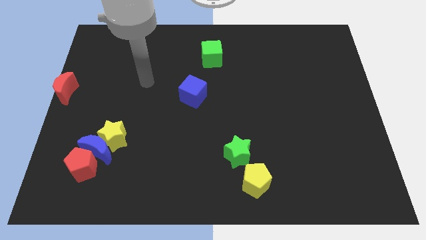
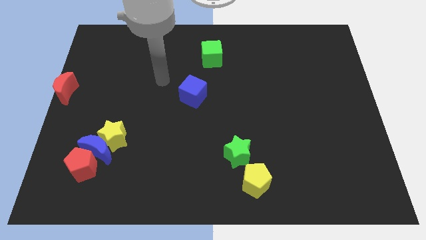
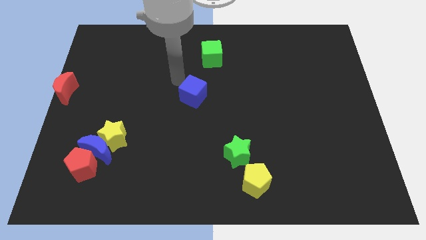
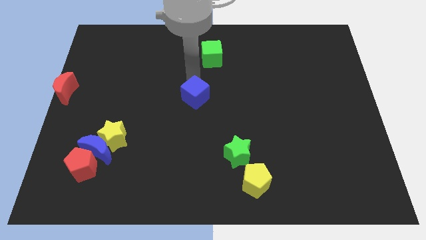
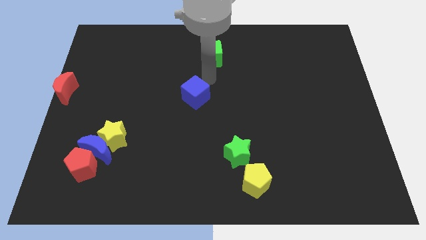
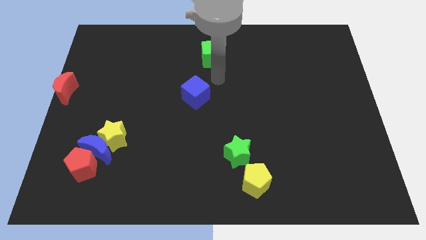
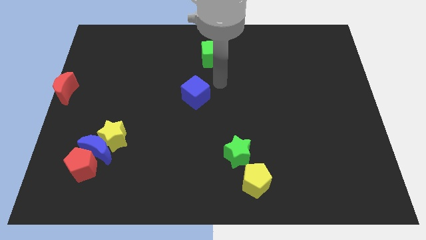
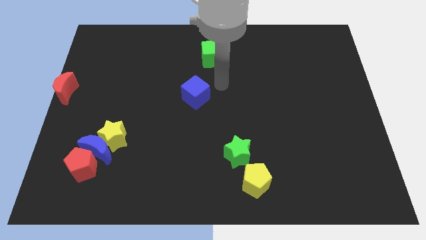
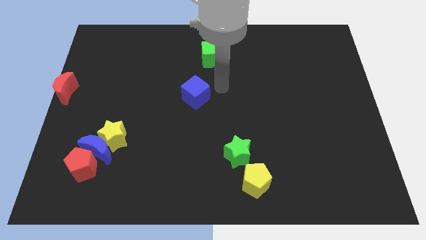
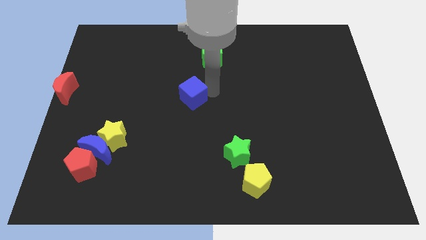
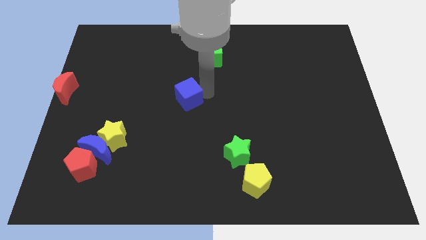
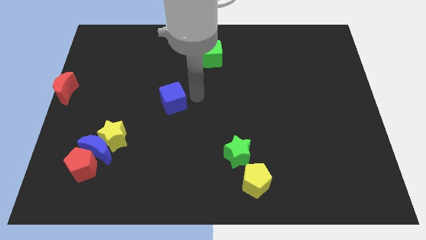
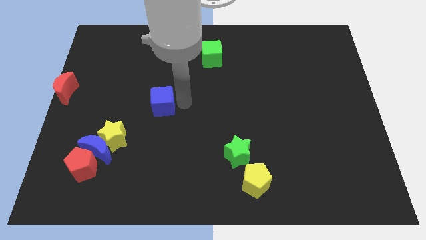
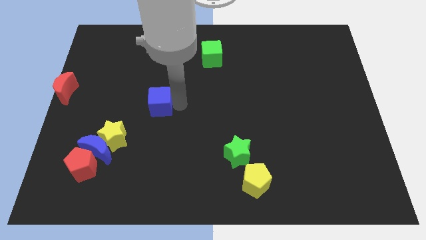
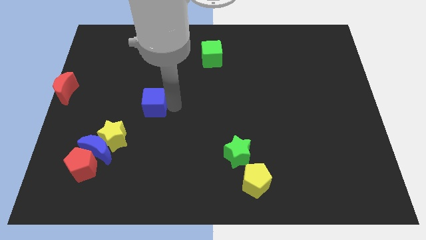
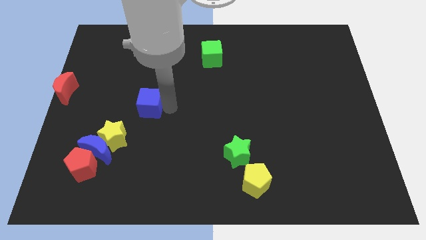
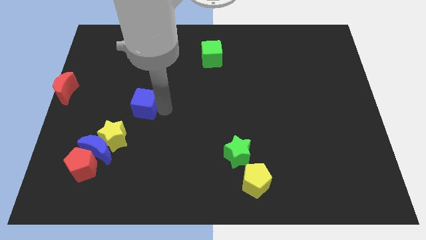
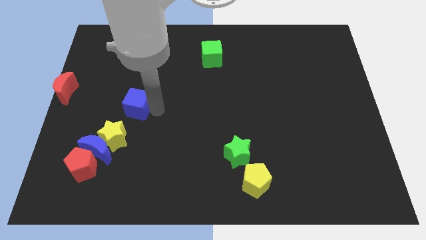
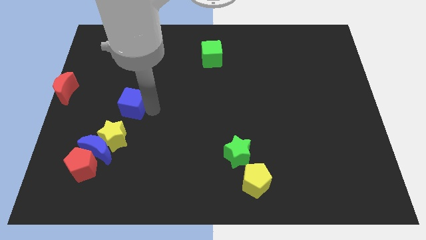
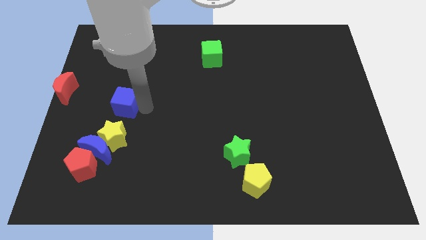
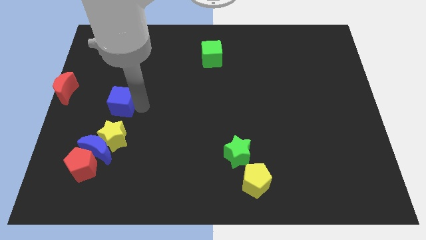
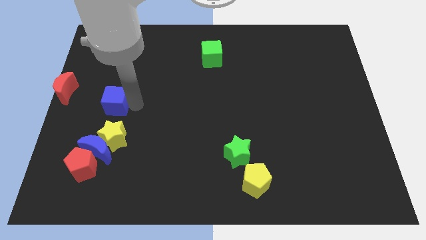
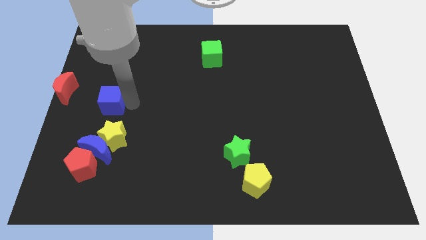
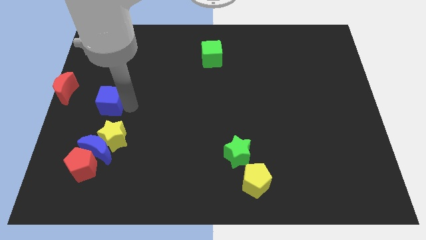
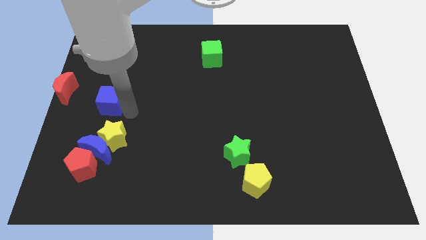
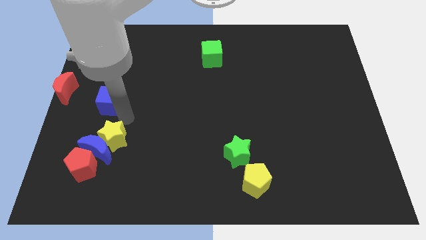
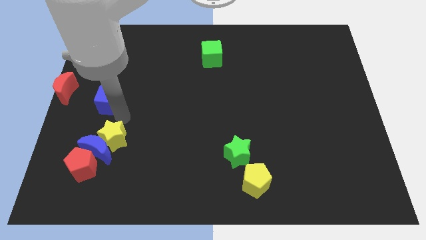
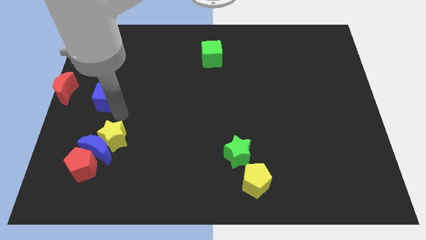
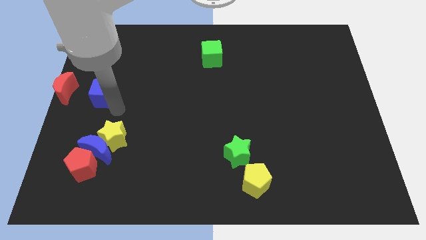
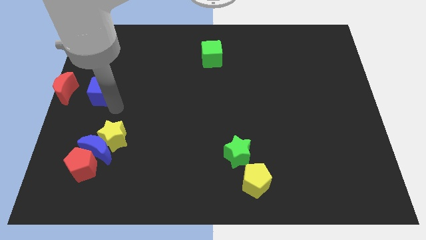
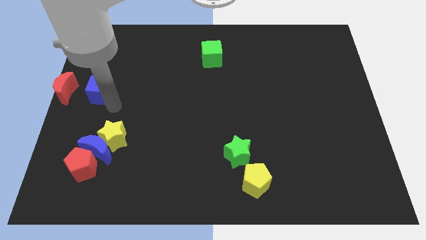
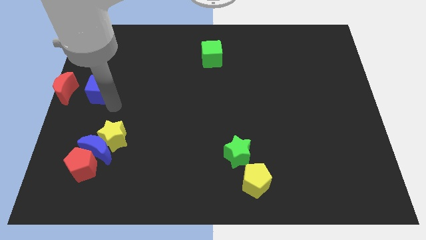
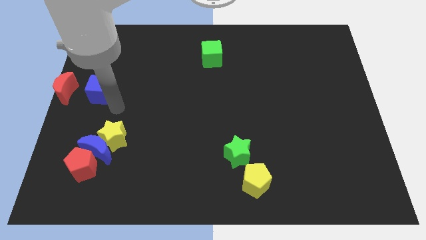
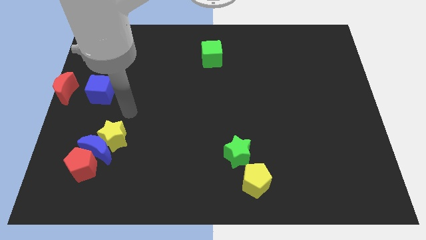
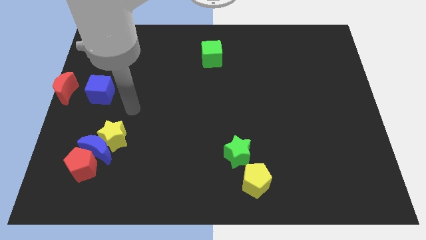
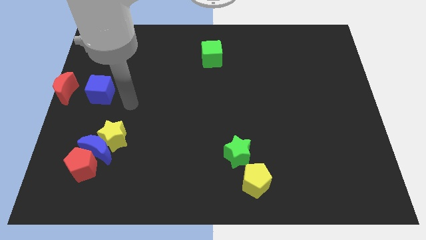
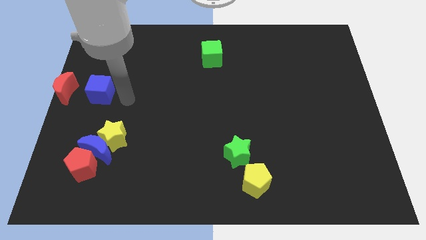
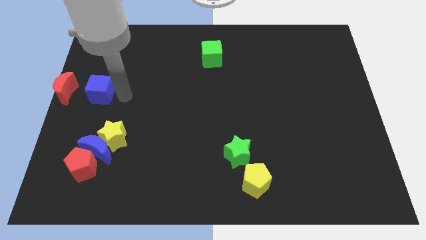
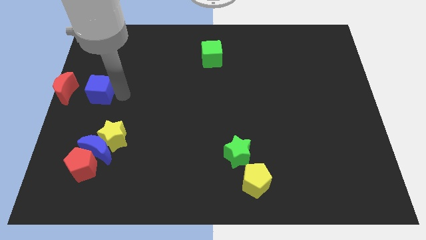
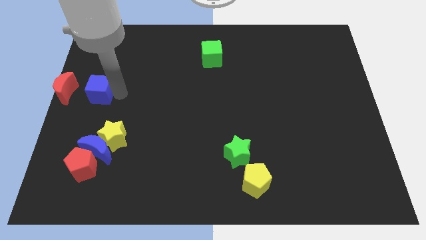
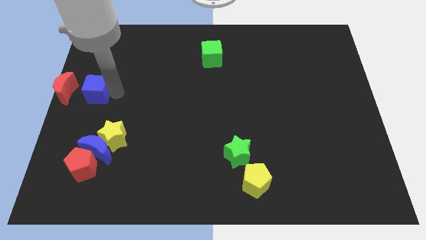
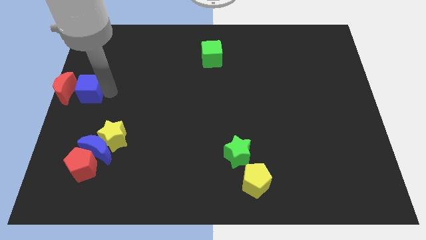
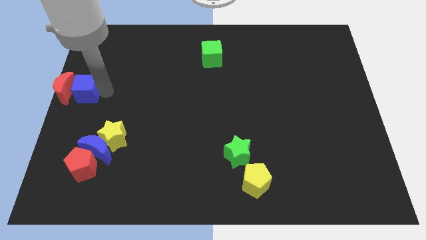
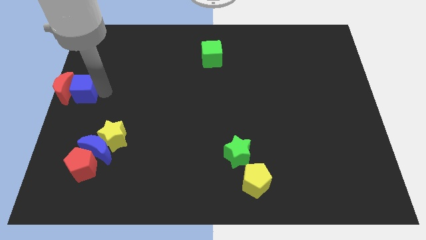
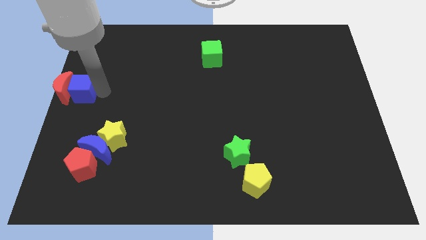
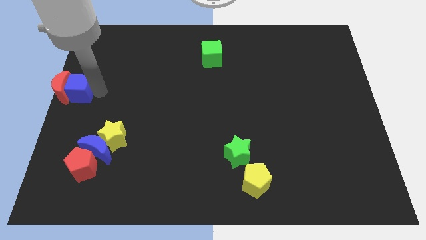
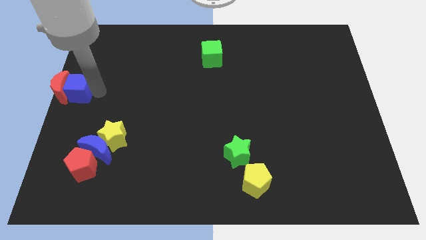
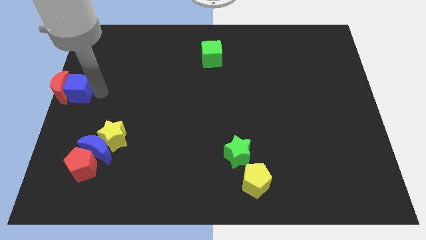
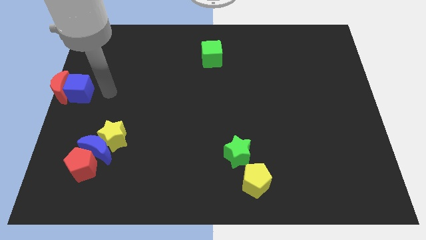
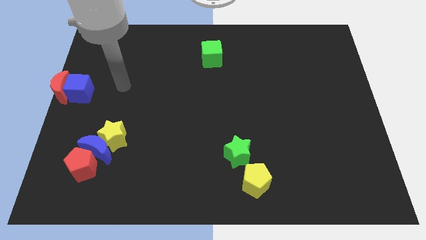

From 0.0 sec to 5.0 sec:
push the blue cube into red moon

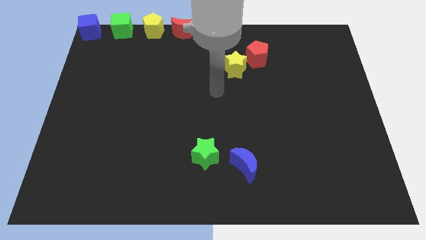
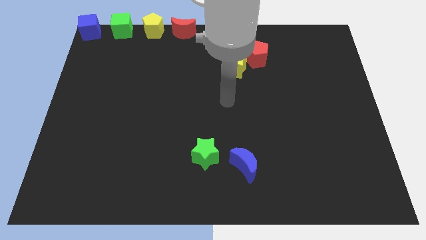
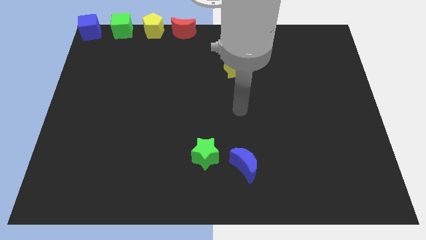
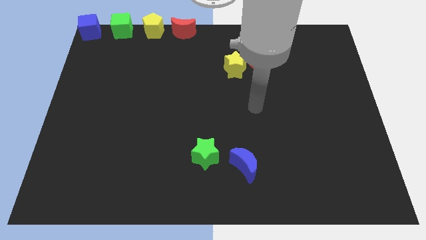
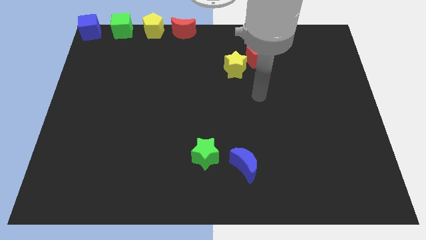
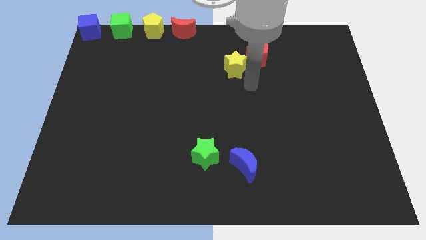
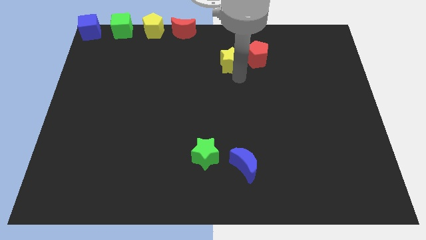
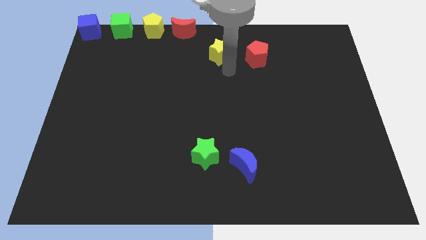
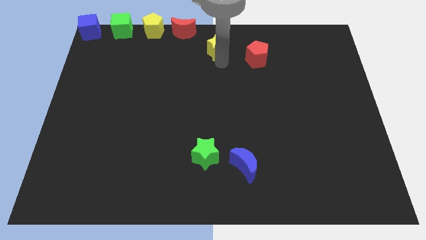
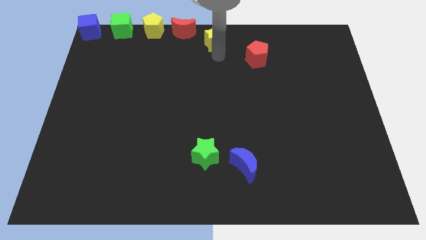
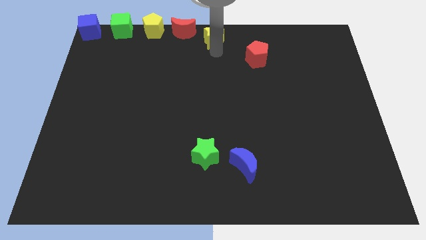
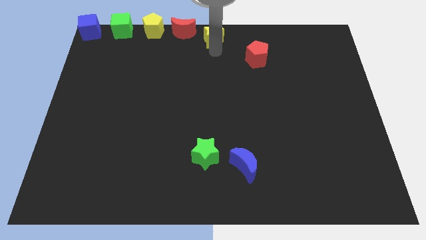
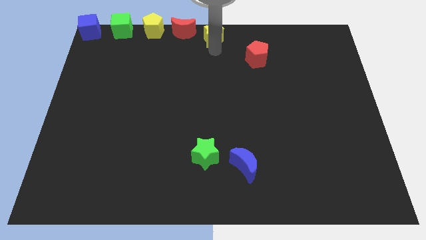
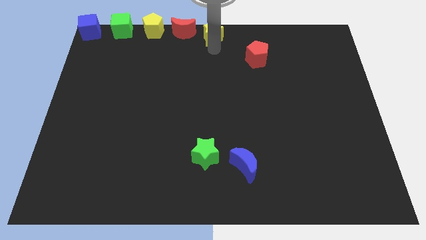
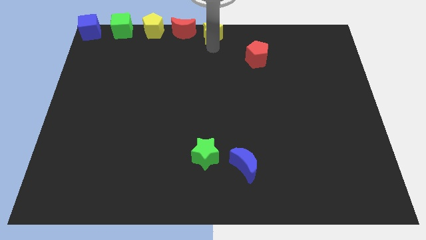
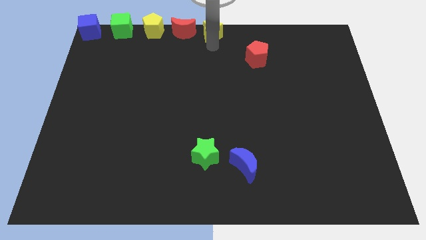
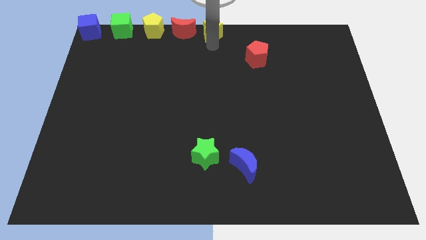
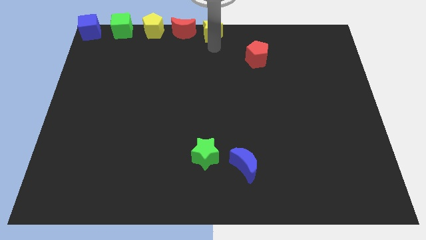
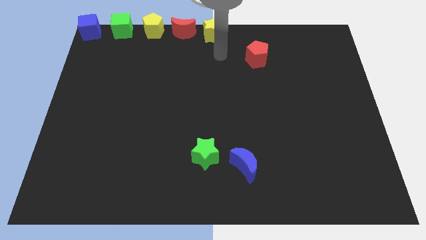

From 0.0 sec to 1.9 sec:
place the yellow star right to the red moon

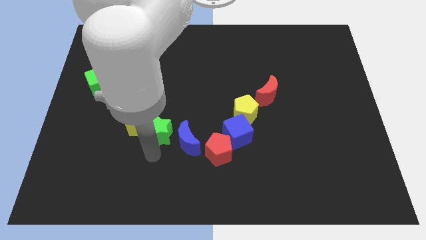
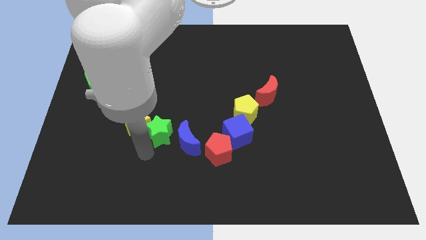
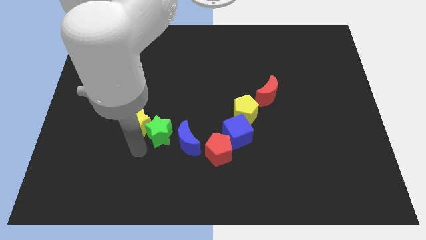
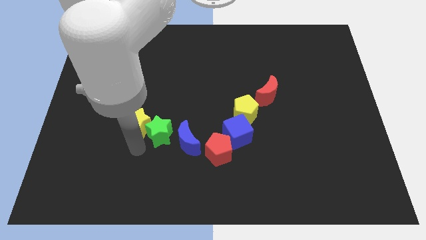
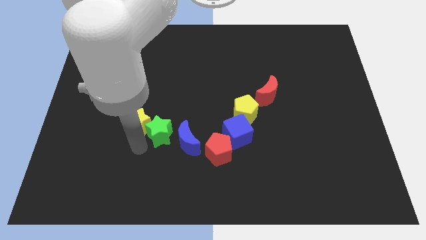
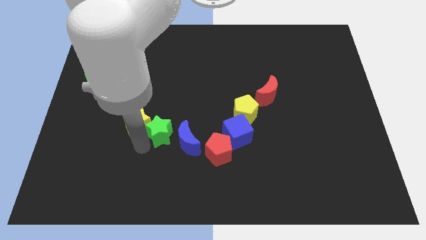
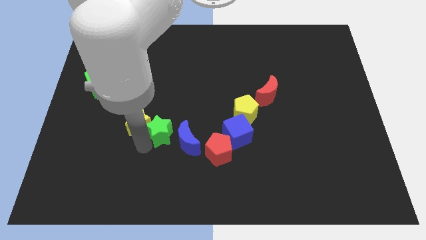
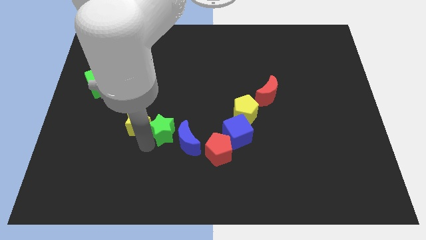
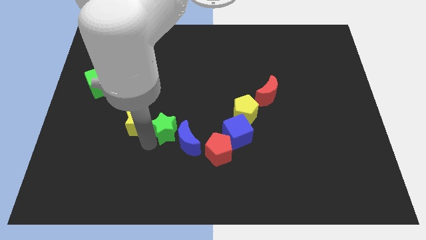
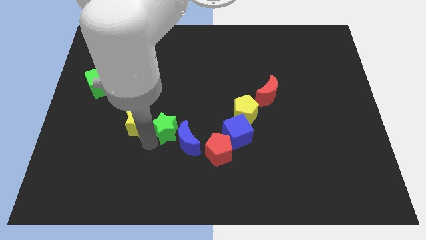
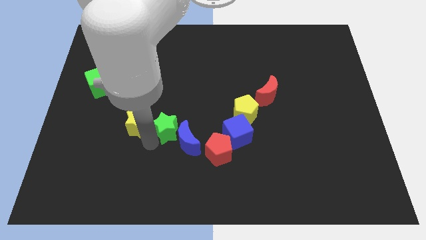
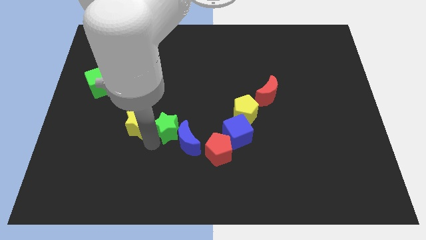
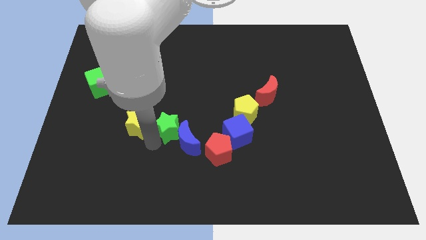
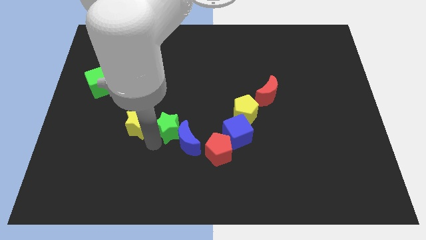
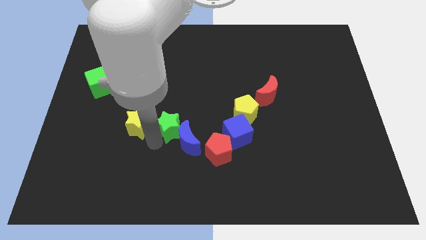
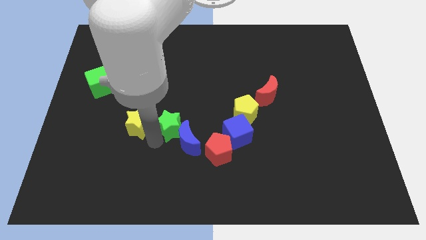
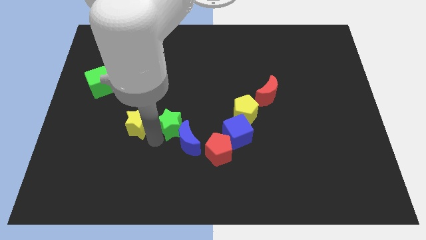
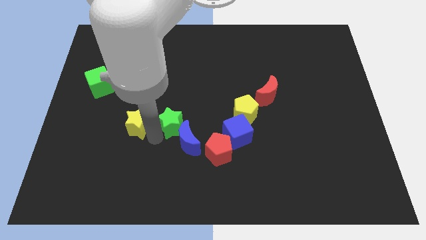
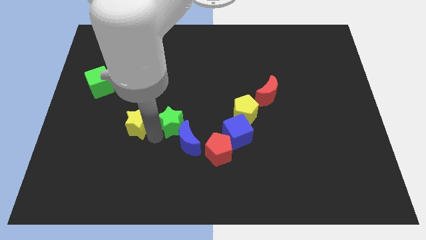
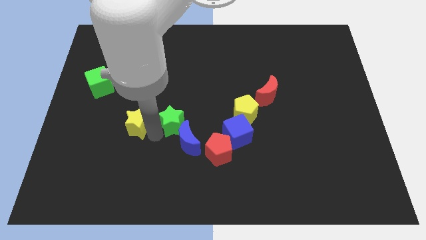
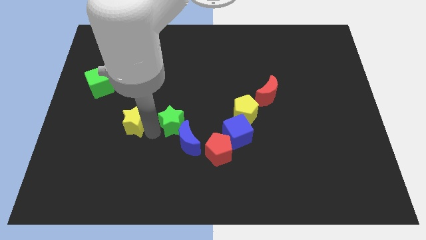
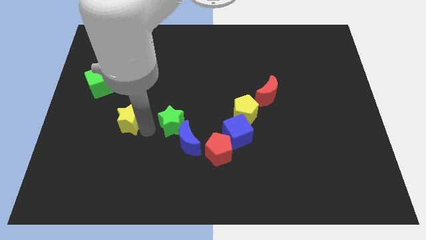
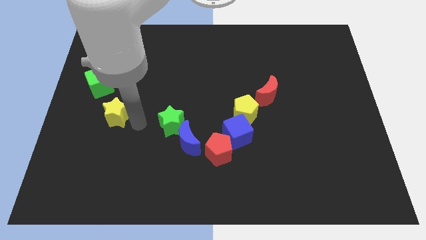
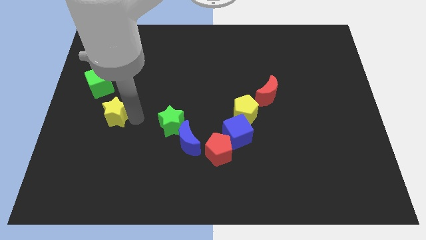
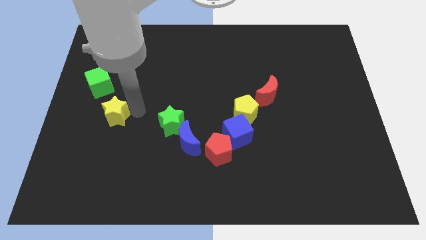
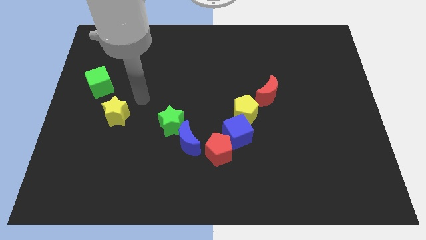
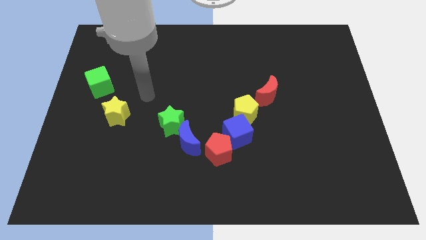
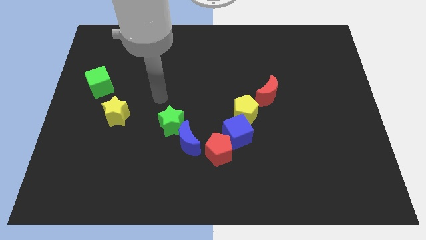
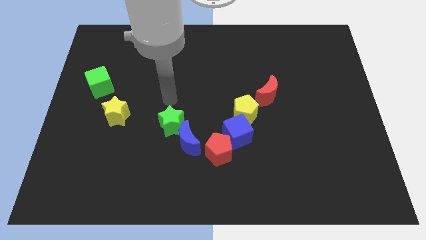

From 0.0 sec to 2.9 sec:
seperate the yellow star and green star
